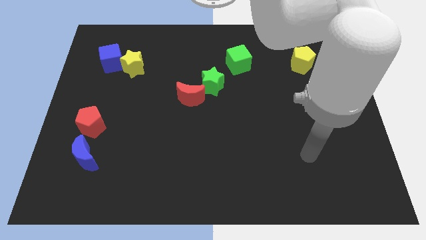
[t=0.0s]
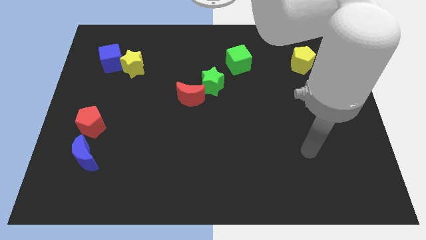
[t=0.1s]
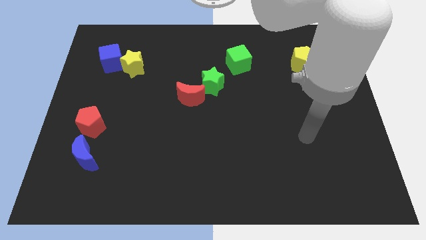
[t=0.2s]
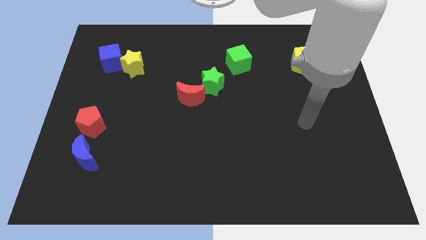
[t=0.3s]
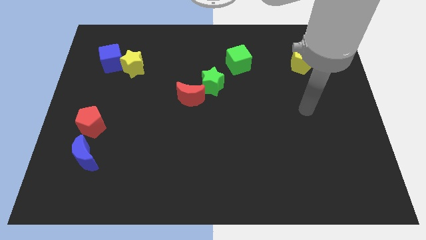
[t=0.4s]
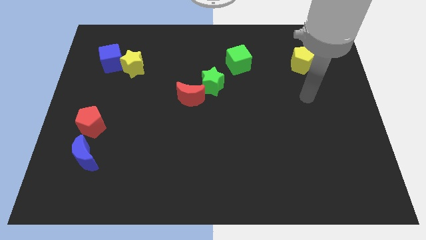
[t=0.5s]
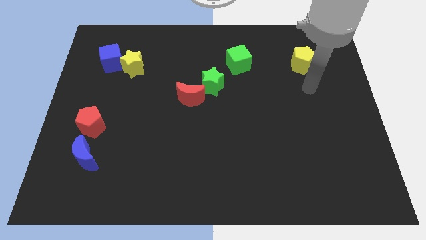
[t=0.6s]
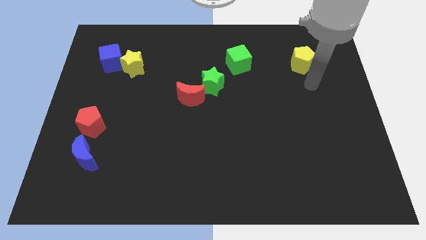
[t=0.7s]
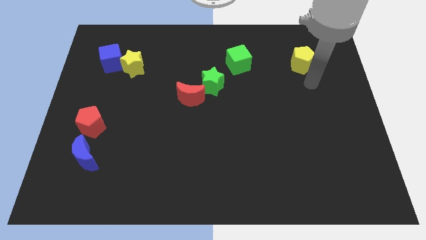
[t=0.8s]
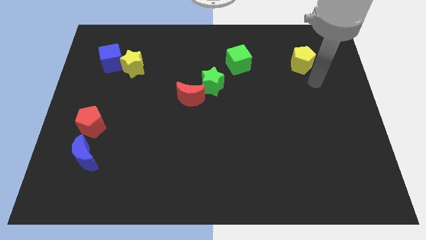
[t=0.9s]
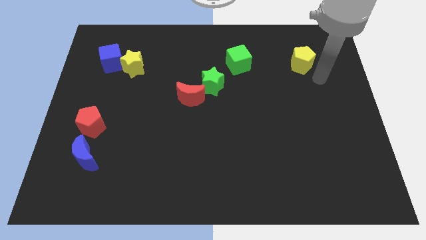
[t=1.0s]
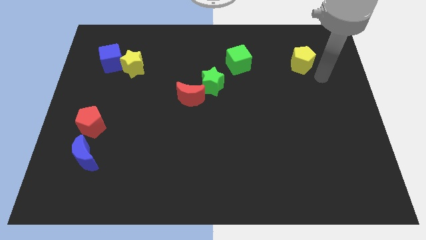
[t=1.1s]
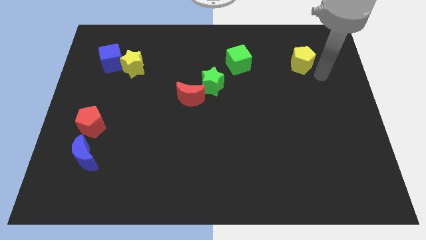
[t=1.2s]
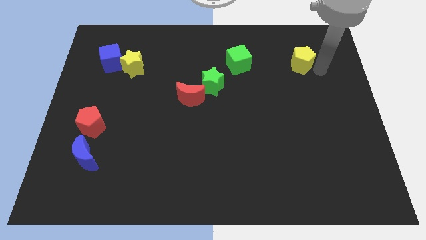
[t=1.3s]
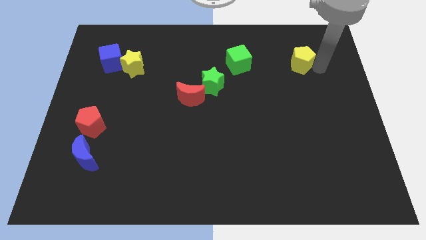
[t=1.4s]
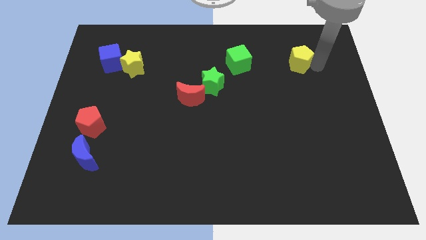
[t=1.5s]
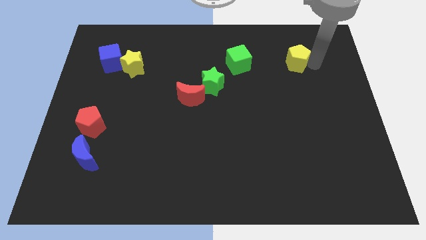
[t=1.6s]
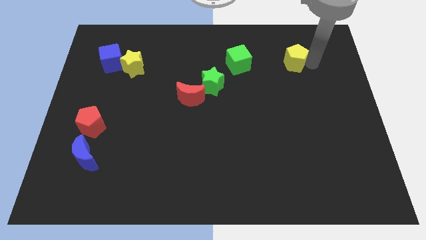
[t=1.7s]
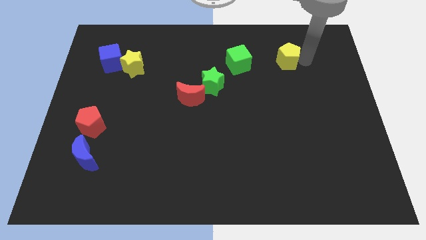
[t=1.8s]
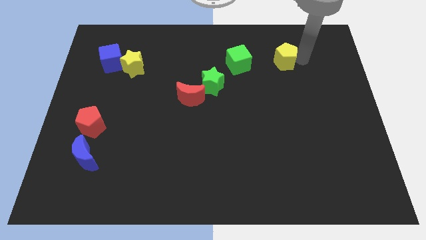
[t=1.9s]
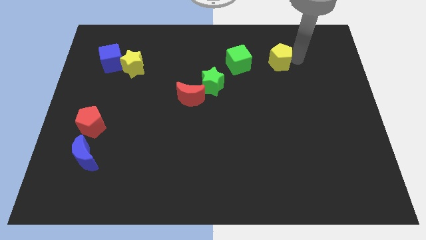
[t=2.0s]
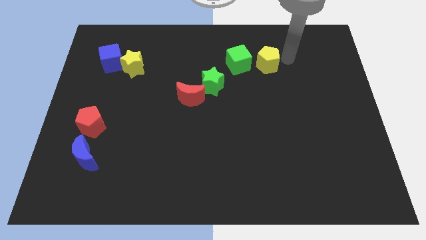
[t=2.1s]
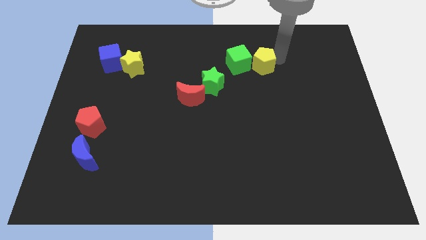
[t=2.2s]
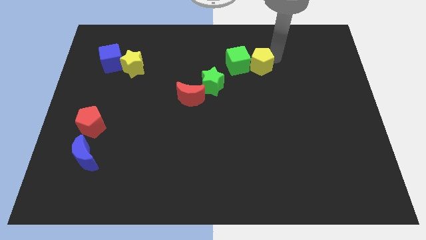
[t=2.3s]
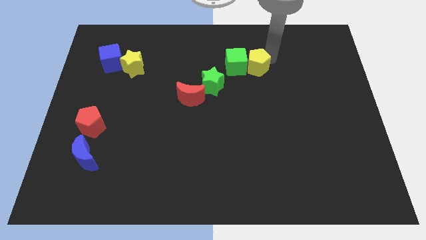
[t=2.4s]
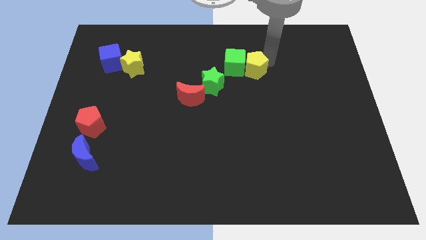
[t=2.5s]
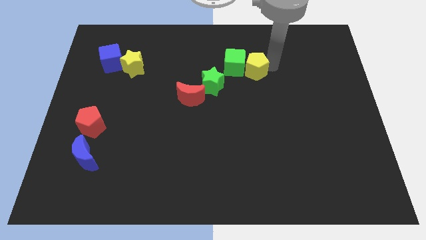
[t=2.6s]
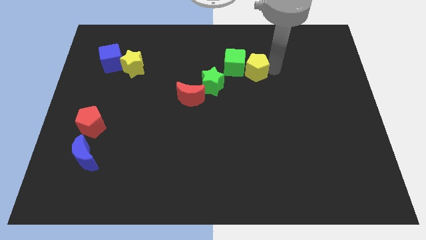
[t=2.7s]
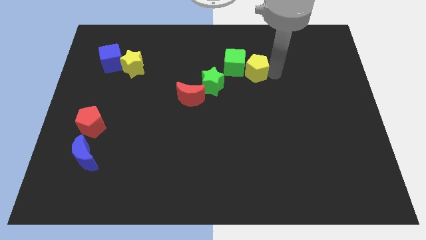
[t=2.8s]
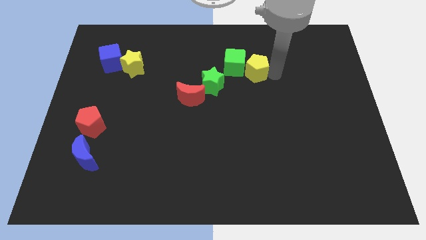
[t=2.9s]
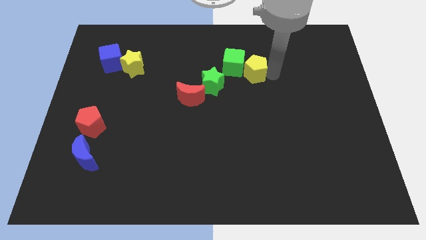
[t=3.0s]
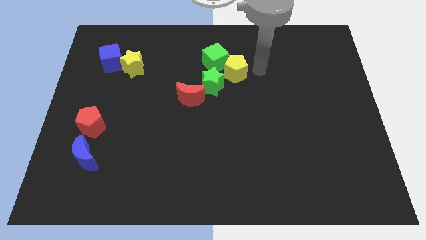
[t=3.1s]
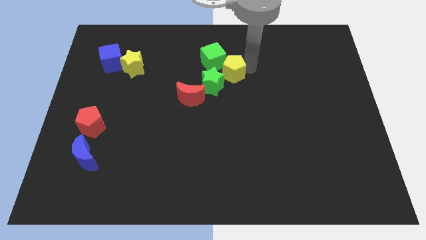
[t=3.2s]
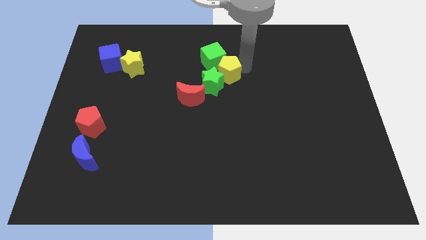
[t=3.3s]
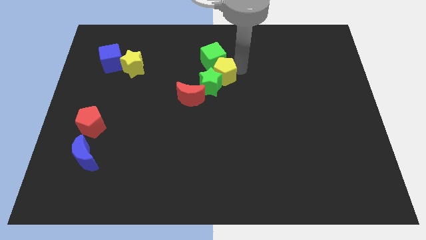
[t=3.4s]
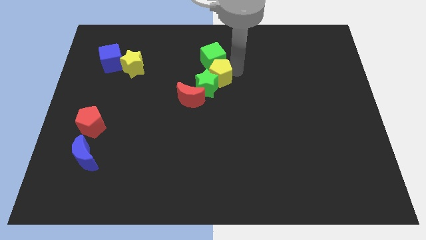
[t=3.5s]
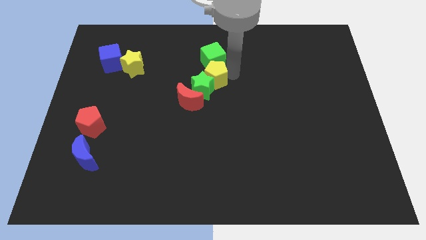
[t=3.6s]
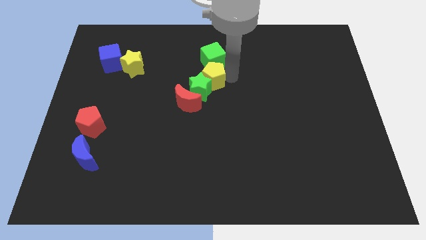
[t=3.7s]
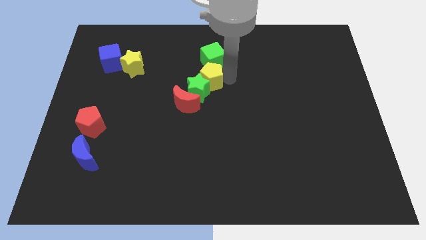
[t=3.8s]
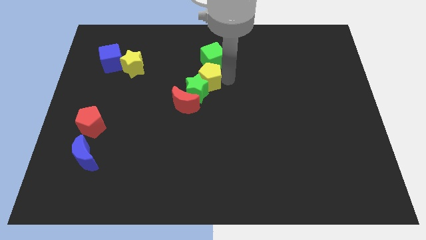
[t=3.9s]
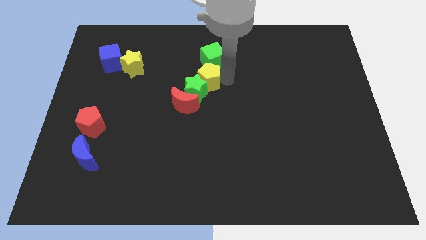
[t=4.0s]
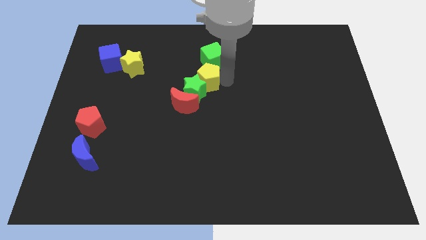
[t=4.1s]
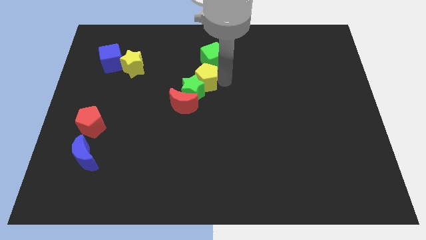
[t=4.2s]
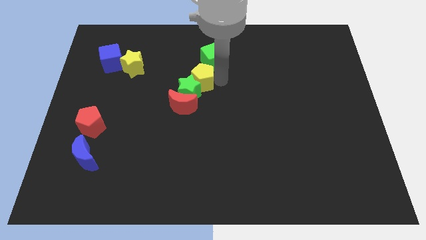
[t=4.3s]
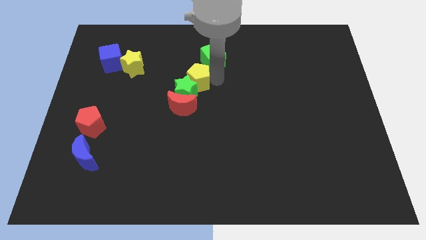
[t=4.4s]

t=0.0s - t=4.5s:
move the yellow pentagon into the green cube and the green star

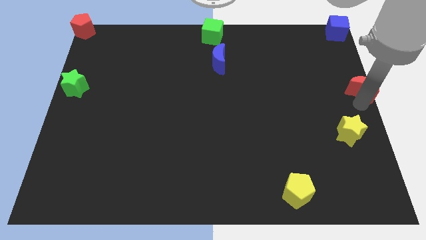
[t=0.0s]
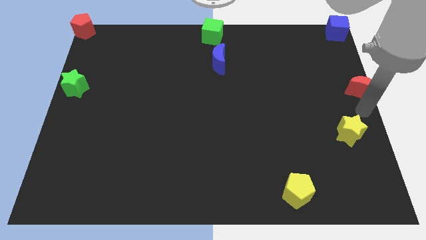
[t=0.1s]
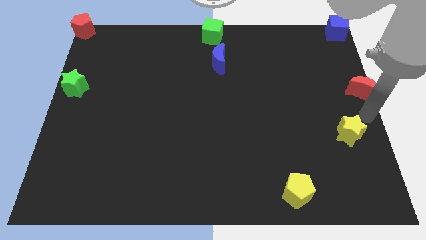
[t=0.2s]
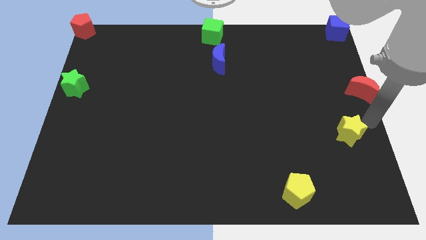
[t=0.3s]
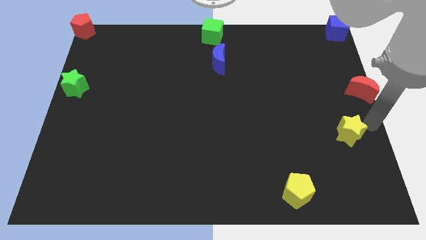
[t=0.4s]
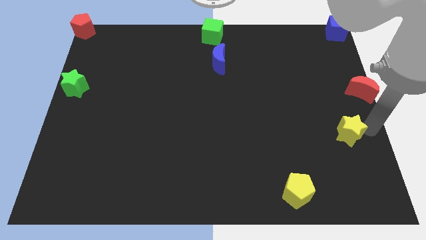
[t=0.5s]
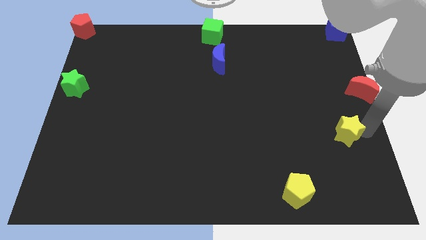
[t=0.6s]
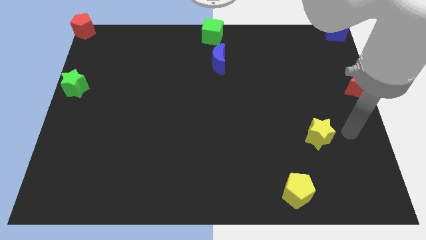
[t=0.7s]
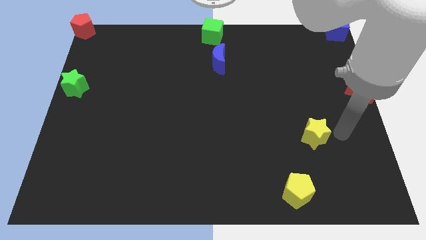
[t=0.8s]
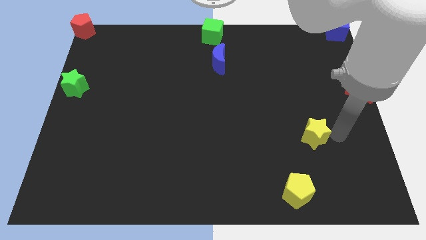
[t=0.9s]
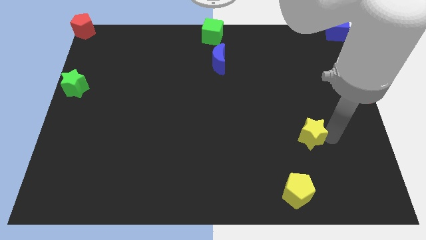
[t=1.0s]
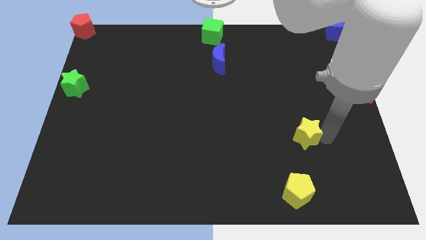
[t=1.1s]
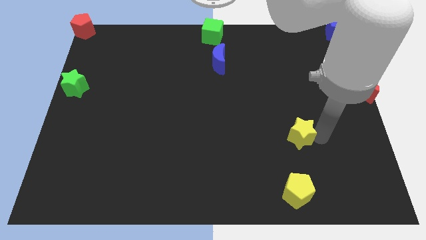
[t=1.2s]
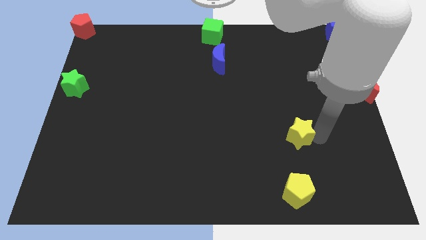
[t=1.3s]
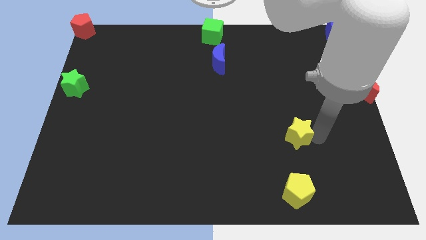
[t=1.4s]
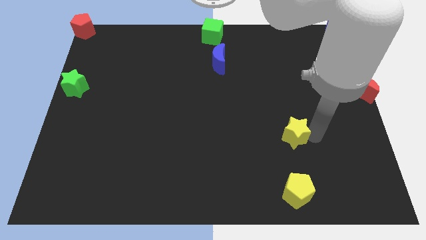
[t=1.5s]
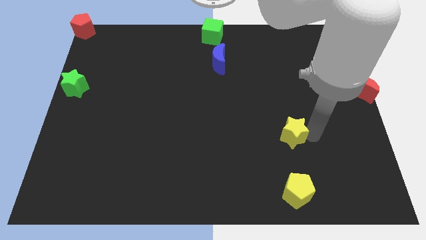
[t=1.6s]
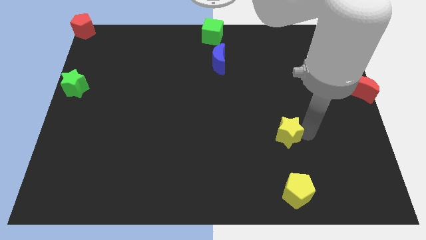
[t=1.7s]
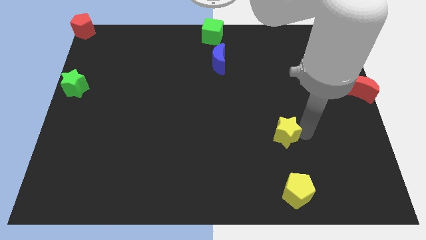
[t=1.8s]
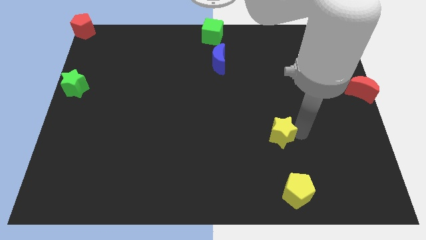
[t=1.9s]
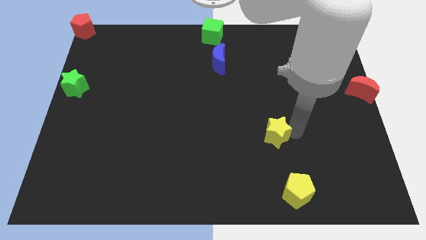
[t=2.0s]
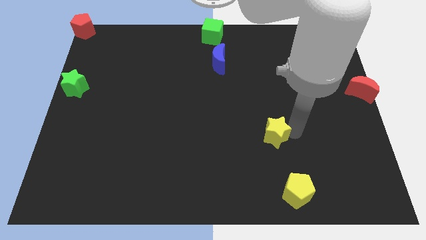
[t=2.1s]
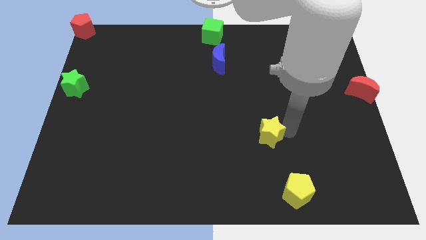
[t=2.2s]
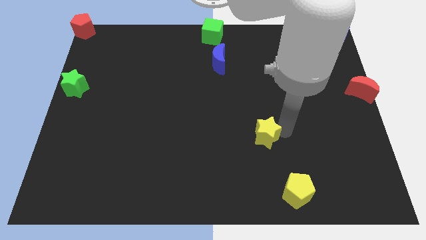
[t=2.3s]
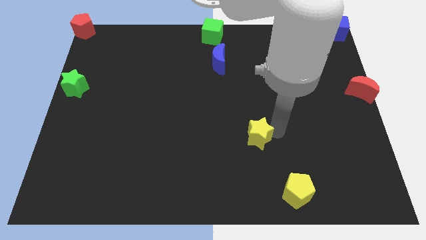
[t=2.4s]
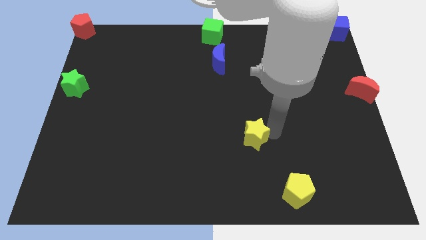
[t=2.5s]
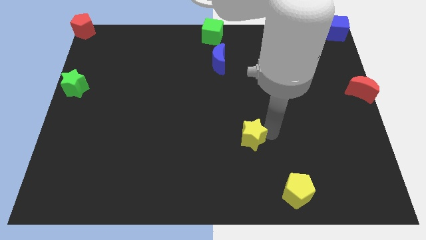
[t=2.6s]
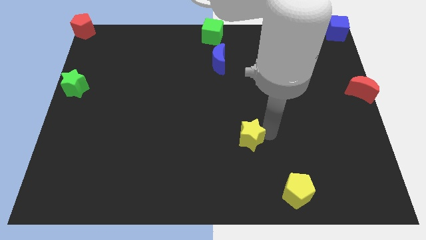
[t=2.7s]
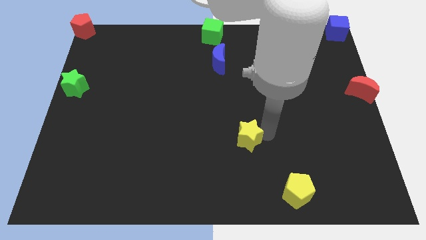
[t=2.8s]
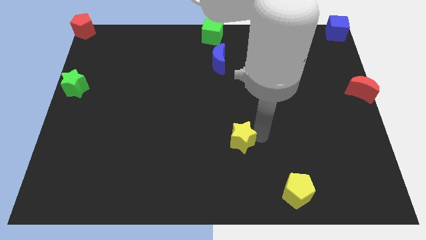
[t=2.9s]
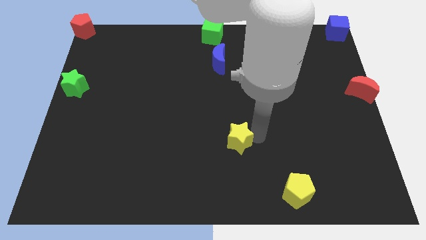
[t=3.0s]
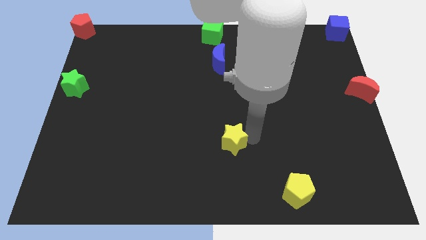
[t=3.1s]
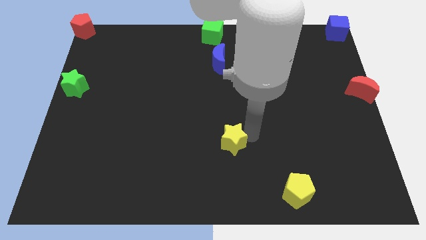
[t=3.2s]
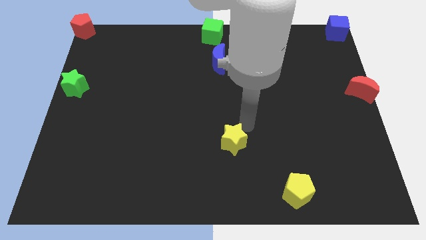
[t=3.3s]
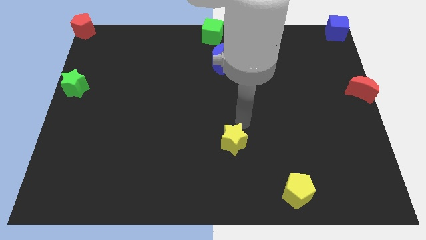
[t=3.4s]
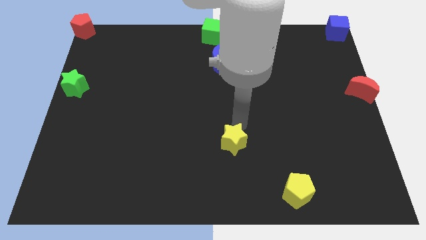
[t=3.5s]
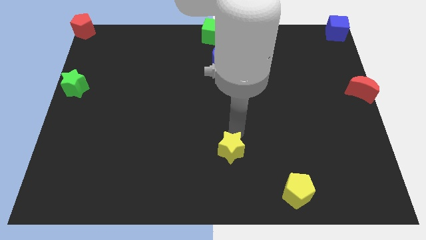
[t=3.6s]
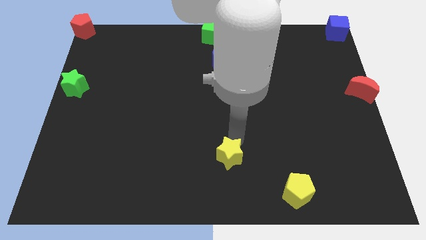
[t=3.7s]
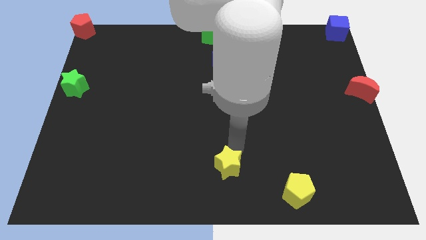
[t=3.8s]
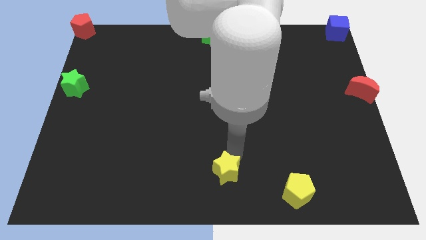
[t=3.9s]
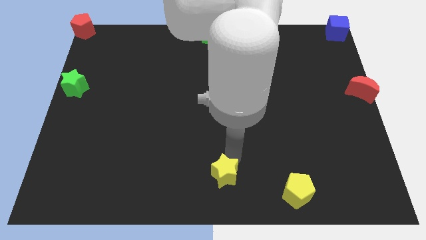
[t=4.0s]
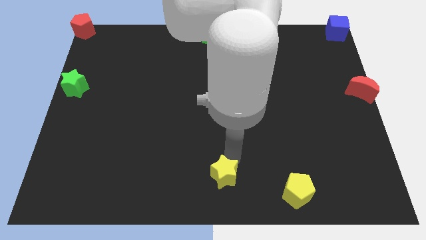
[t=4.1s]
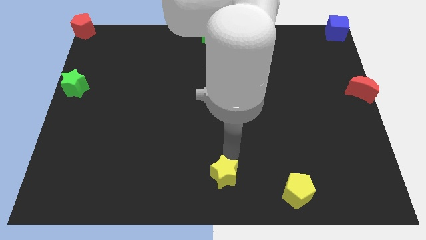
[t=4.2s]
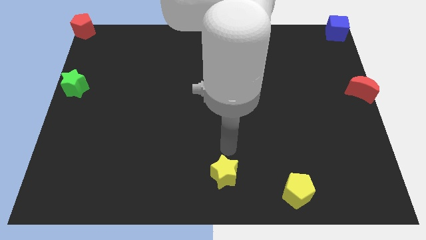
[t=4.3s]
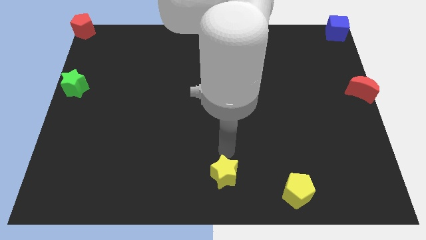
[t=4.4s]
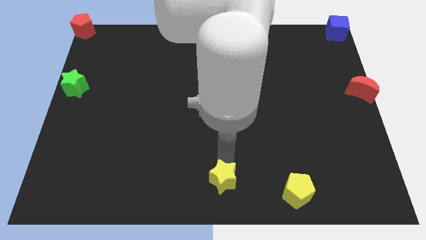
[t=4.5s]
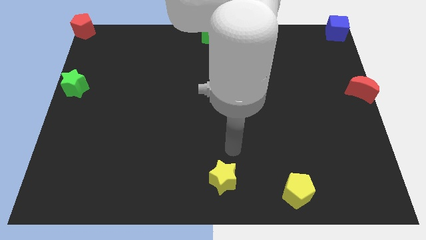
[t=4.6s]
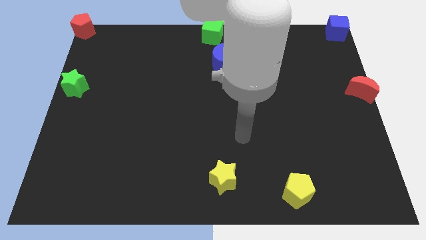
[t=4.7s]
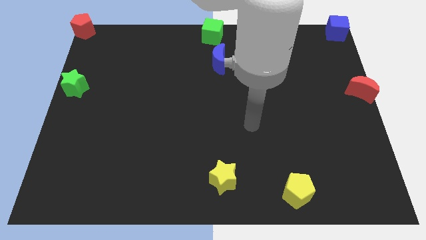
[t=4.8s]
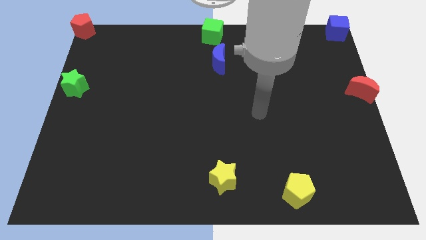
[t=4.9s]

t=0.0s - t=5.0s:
move the yellow star to the bottom center of the board
